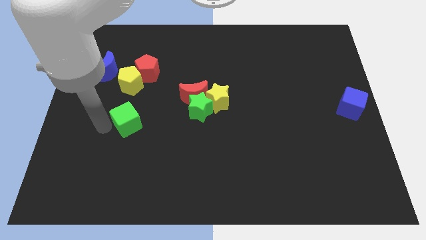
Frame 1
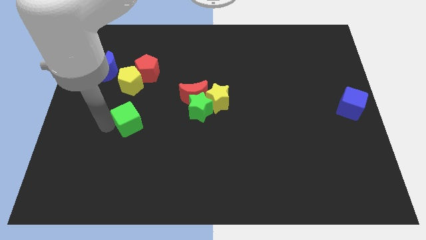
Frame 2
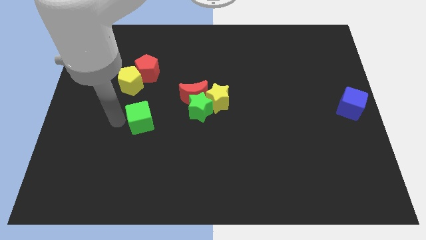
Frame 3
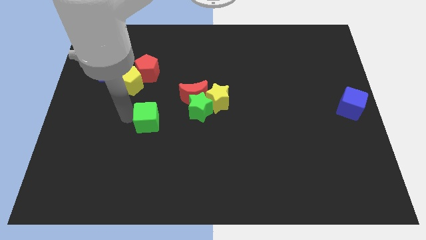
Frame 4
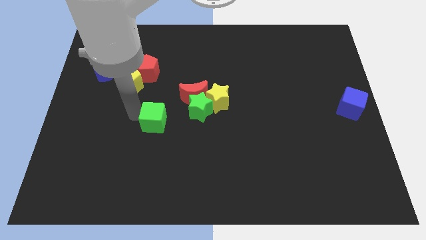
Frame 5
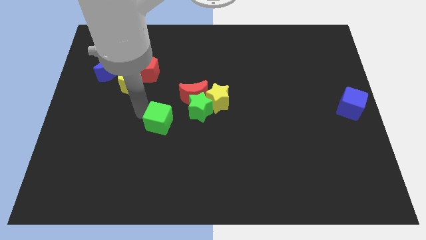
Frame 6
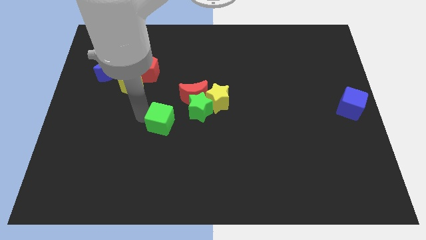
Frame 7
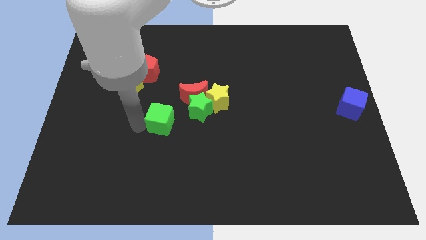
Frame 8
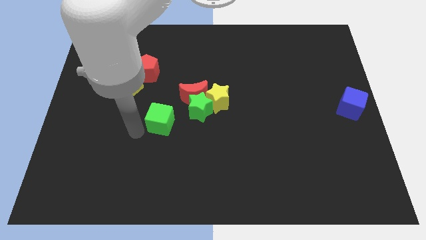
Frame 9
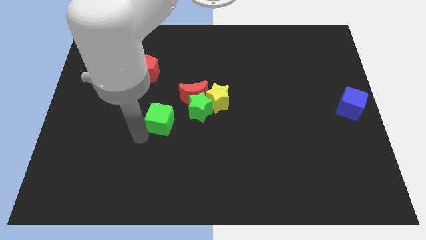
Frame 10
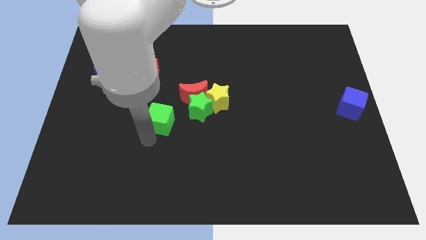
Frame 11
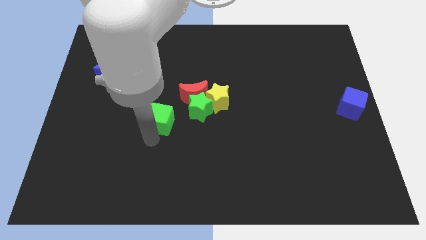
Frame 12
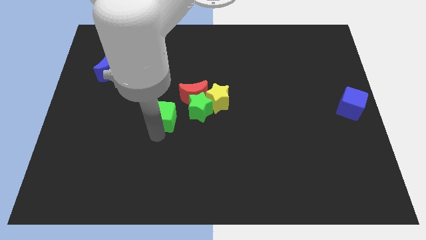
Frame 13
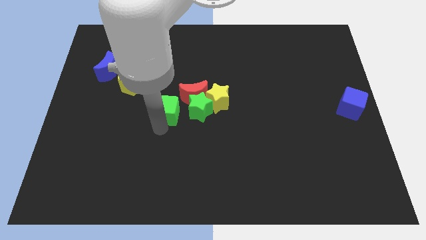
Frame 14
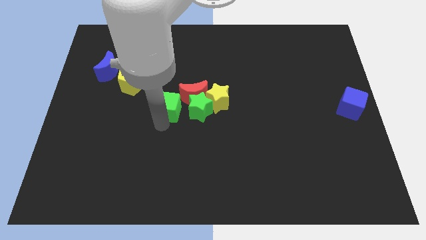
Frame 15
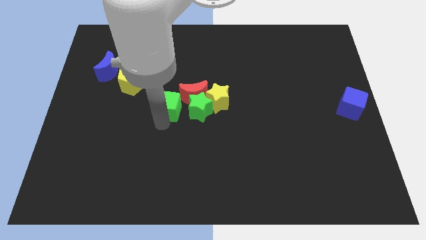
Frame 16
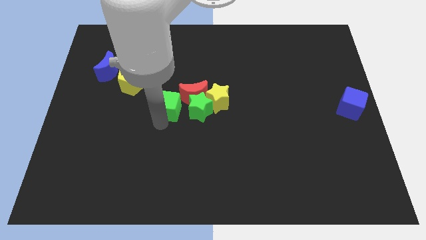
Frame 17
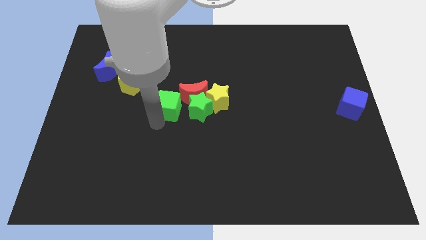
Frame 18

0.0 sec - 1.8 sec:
push the green cube to the right

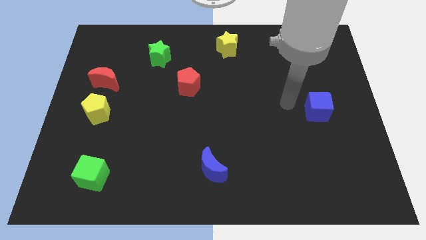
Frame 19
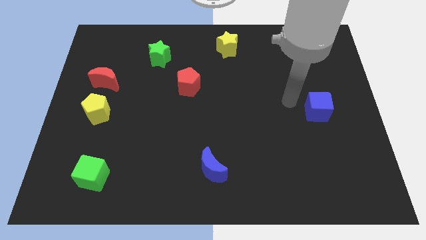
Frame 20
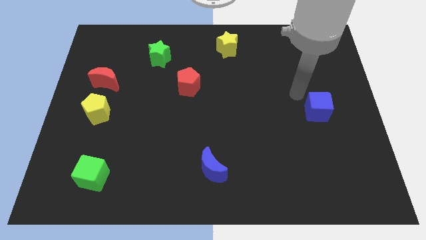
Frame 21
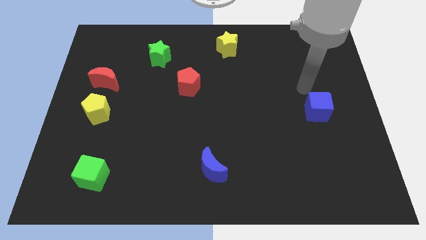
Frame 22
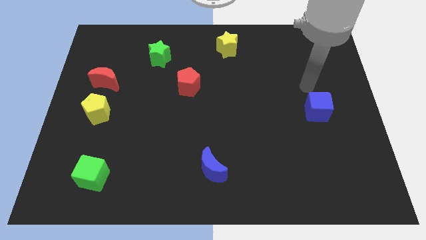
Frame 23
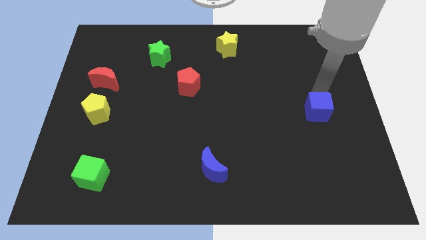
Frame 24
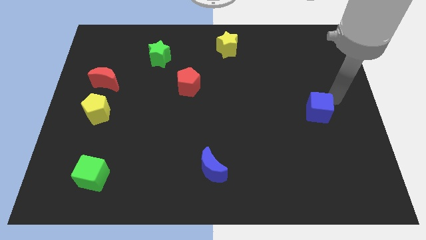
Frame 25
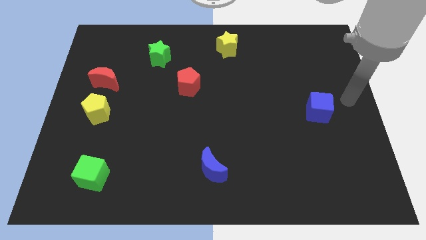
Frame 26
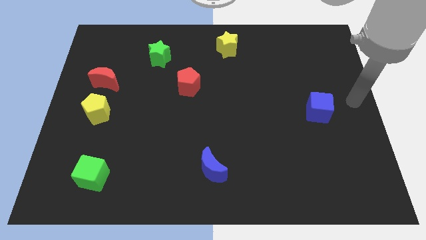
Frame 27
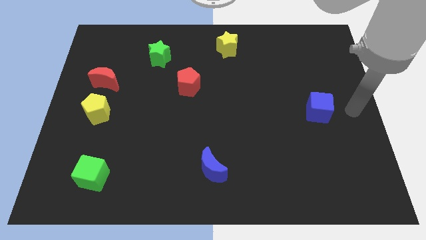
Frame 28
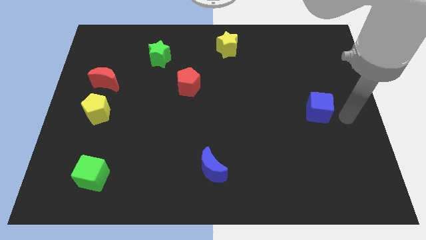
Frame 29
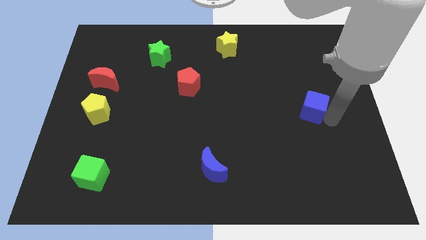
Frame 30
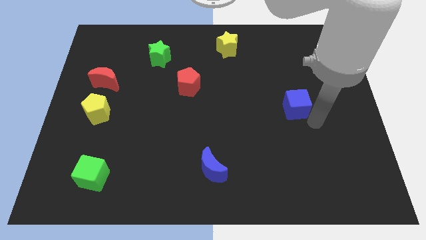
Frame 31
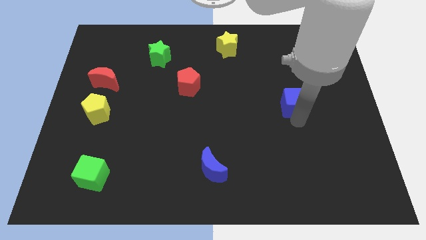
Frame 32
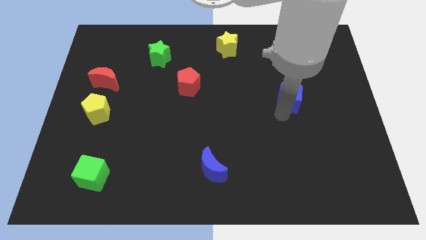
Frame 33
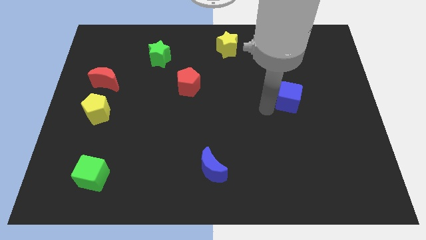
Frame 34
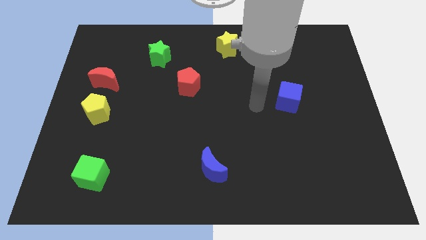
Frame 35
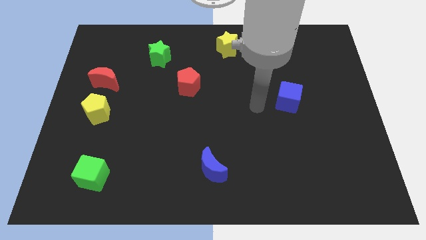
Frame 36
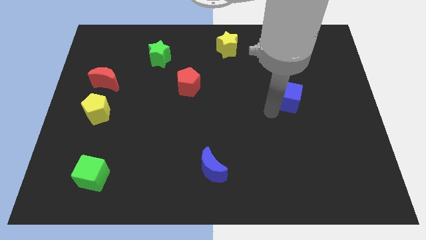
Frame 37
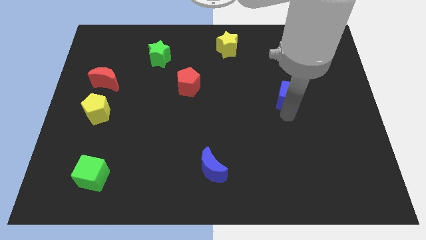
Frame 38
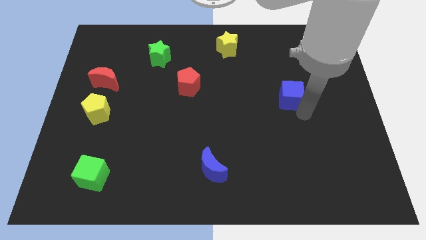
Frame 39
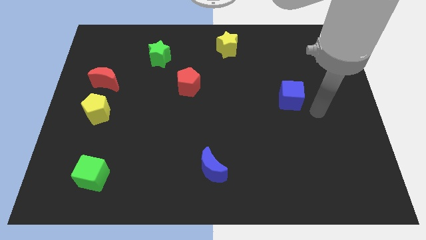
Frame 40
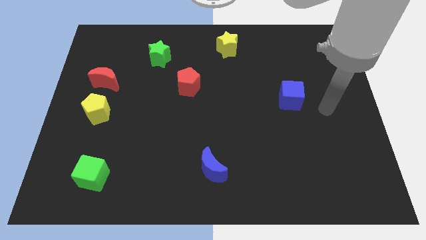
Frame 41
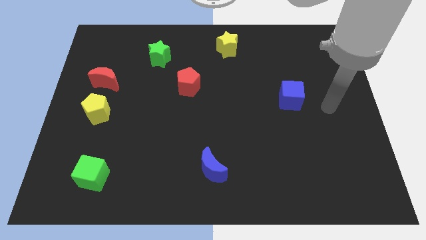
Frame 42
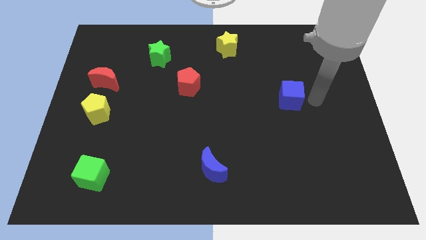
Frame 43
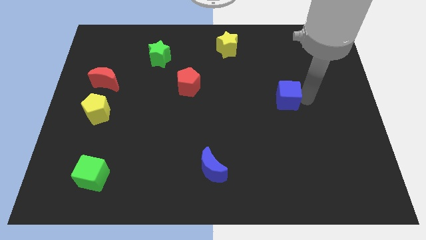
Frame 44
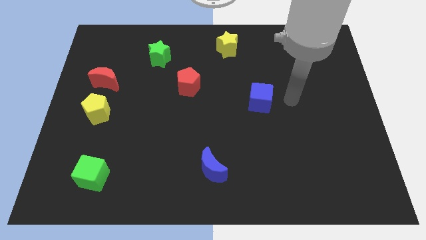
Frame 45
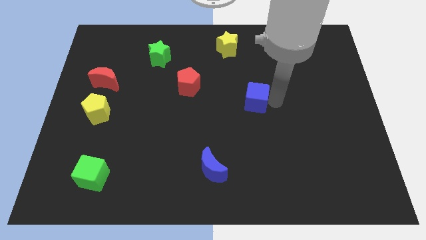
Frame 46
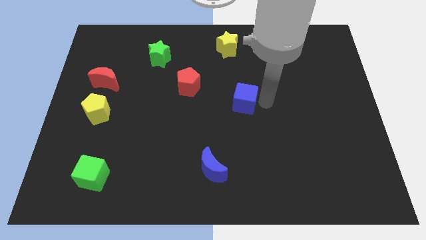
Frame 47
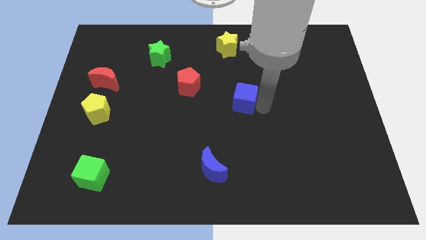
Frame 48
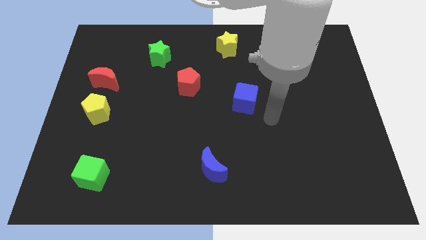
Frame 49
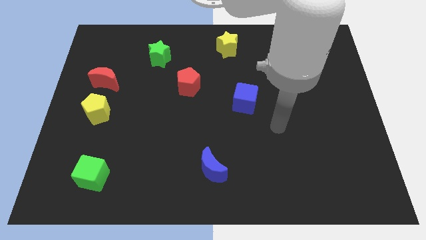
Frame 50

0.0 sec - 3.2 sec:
slide the blue cube diagonally to the red pentagon

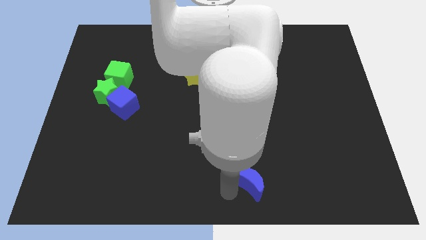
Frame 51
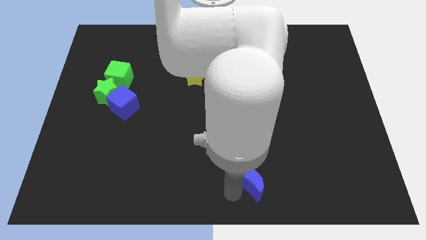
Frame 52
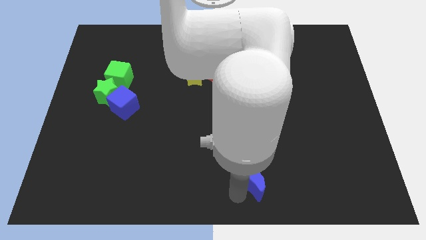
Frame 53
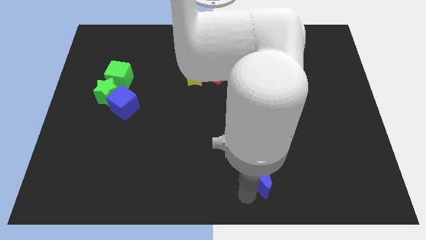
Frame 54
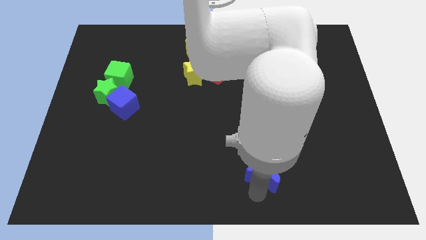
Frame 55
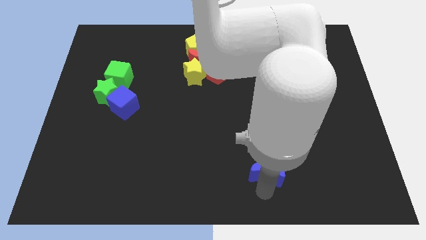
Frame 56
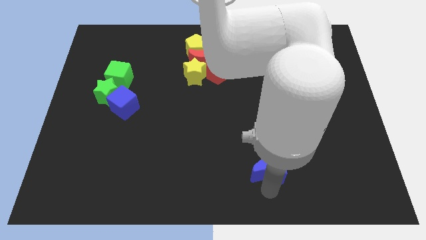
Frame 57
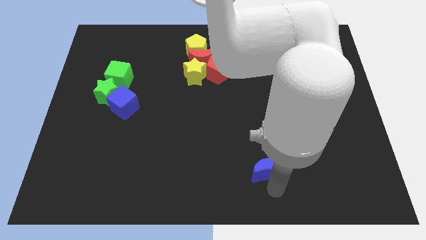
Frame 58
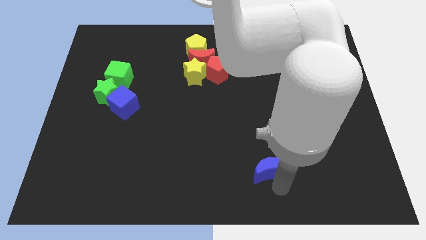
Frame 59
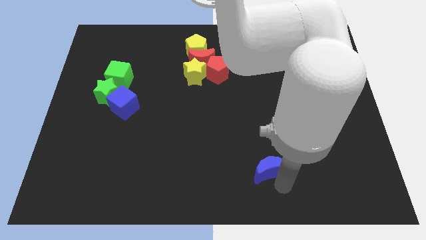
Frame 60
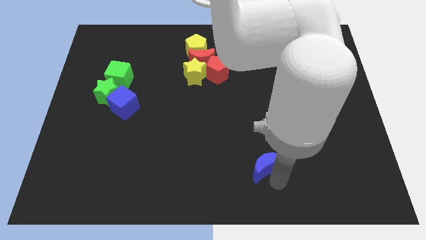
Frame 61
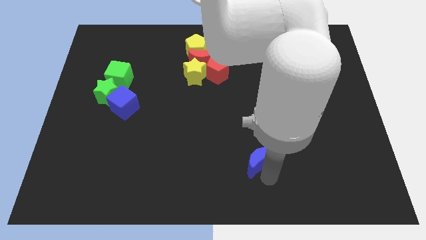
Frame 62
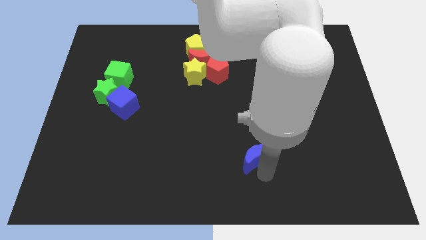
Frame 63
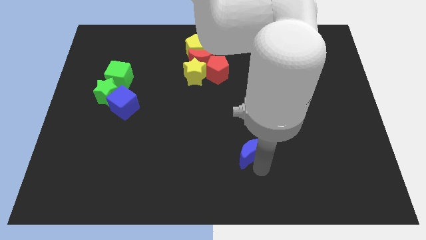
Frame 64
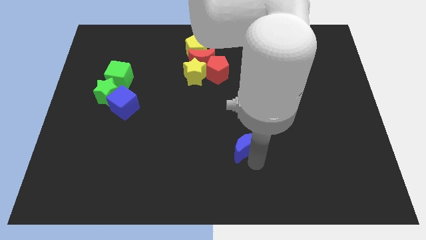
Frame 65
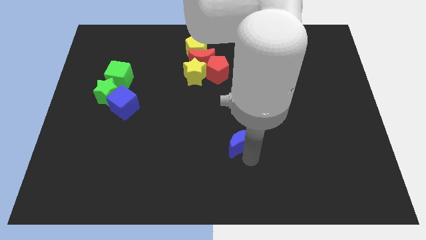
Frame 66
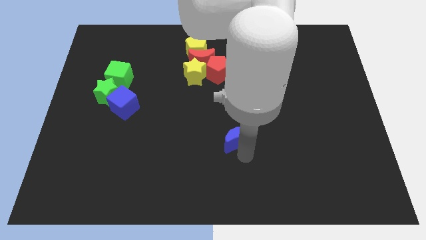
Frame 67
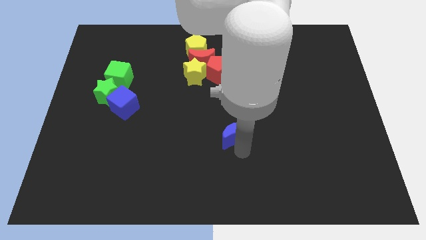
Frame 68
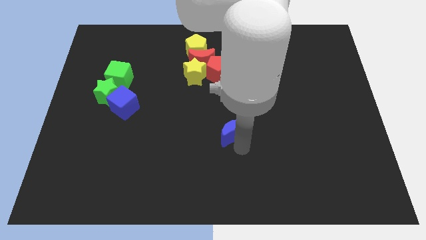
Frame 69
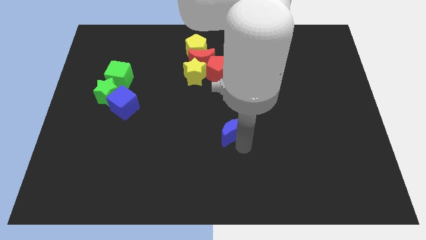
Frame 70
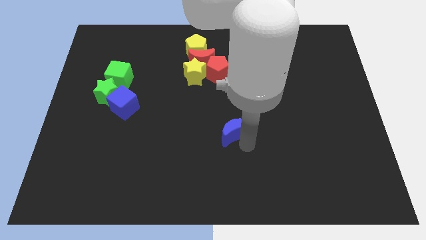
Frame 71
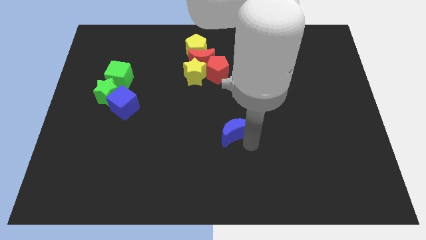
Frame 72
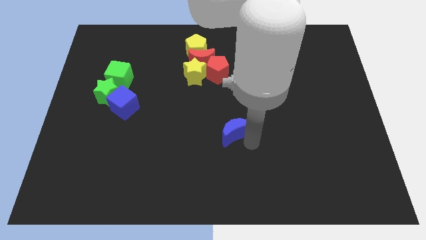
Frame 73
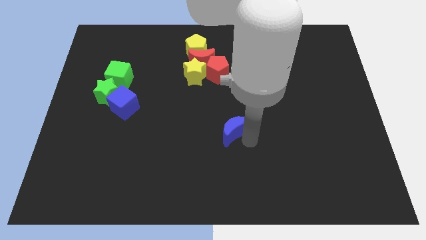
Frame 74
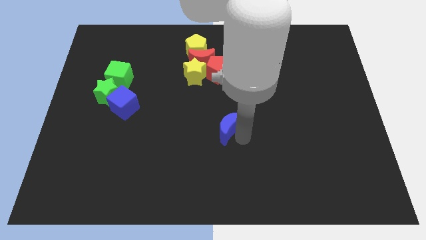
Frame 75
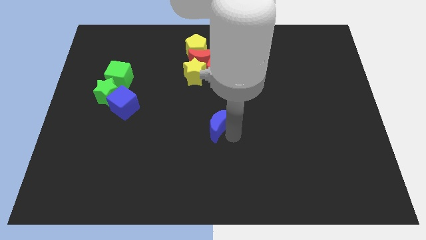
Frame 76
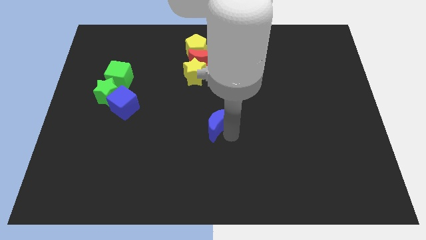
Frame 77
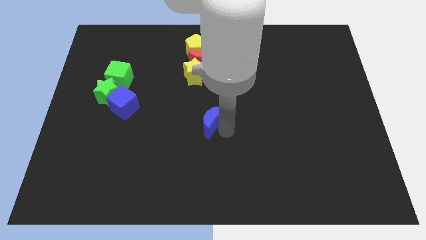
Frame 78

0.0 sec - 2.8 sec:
place the blue crescent near to the center point of the board

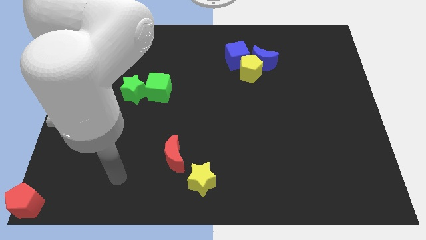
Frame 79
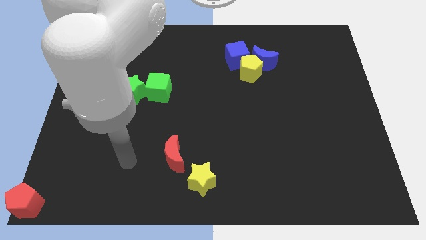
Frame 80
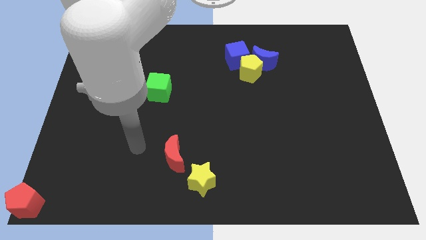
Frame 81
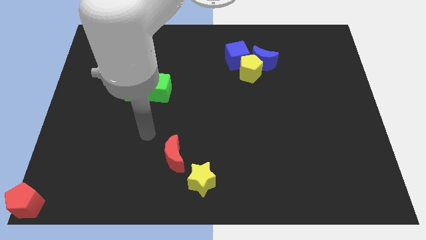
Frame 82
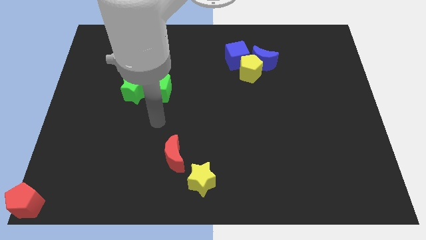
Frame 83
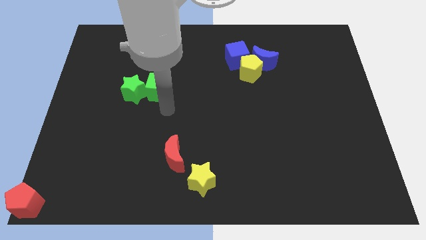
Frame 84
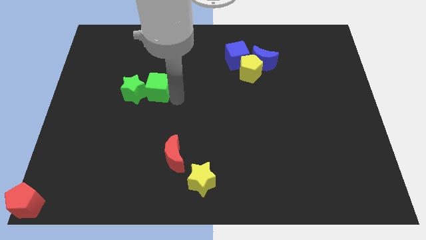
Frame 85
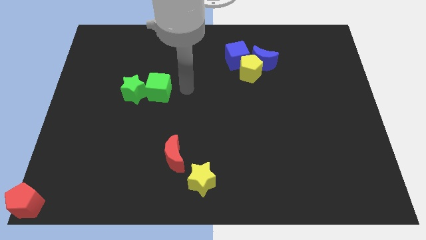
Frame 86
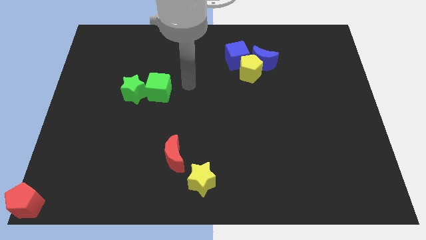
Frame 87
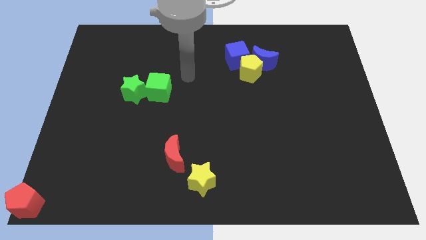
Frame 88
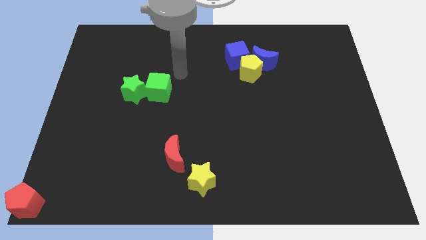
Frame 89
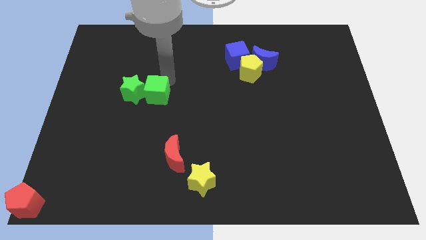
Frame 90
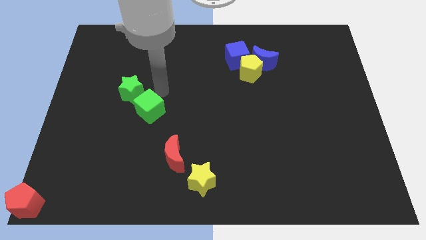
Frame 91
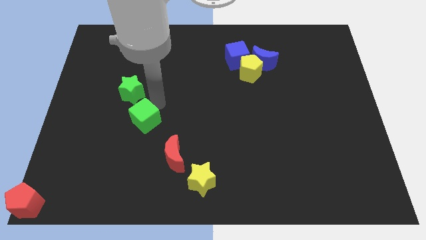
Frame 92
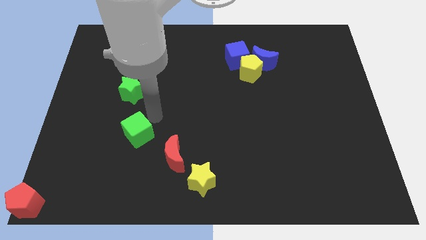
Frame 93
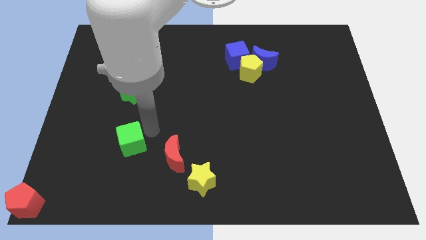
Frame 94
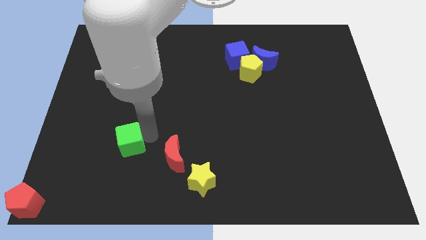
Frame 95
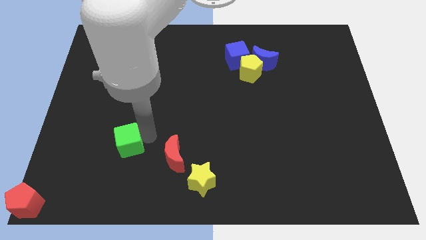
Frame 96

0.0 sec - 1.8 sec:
push the green cube to the bottom of the green star
